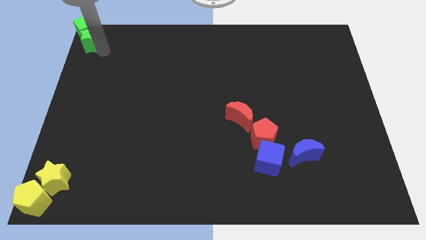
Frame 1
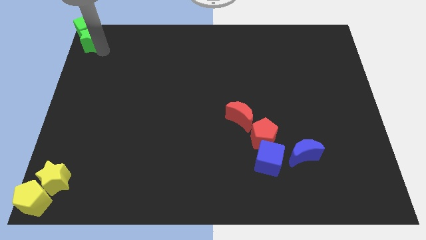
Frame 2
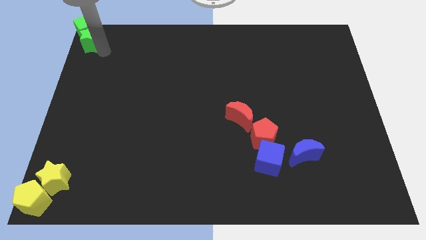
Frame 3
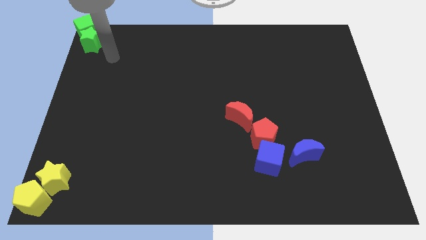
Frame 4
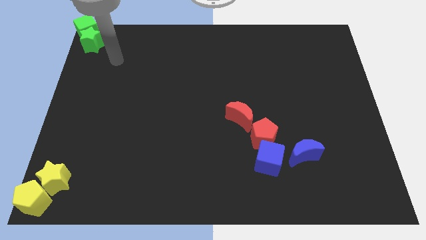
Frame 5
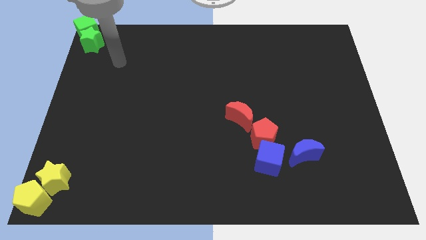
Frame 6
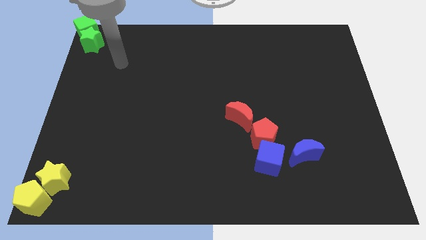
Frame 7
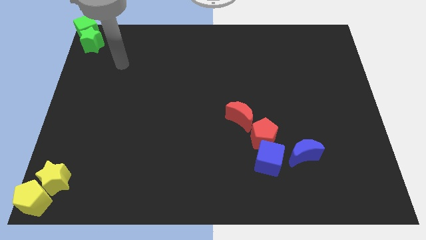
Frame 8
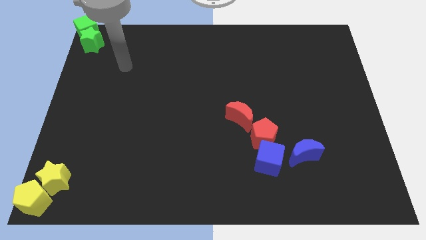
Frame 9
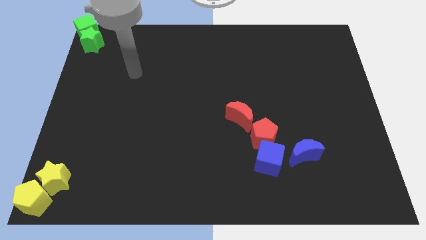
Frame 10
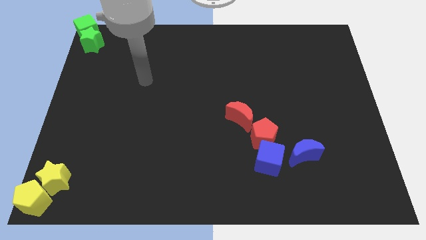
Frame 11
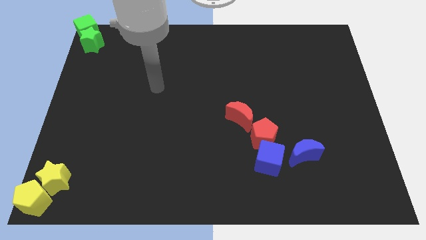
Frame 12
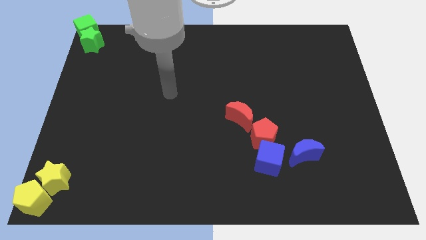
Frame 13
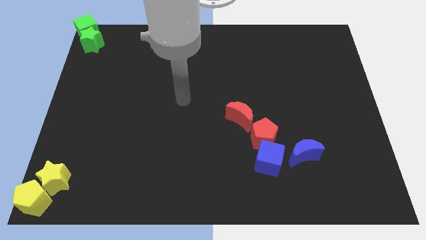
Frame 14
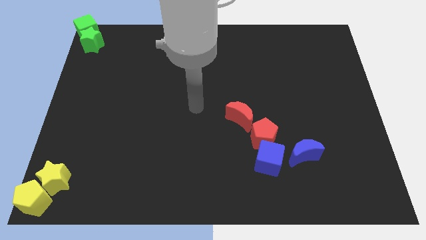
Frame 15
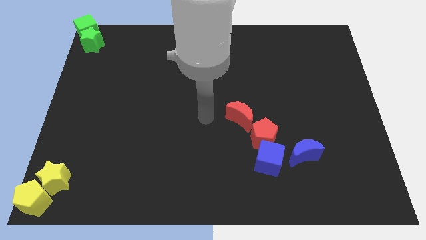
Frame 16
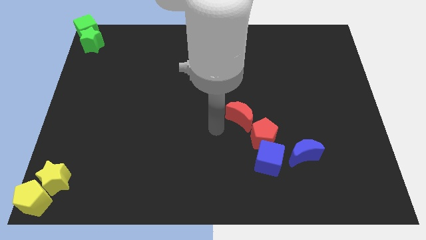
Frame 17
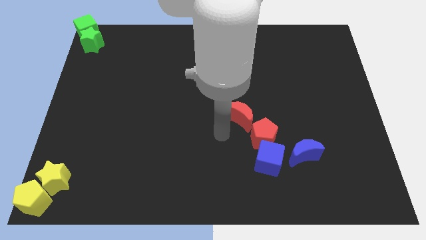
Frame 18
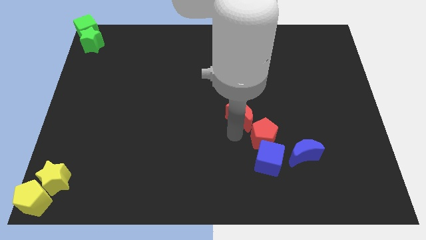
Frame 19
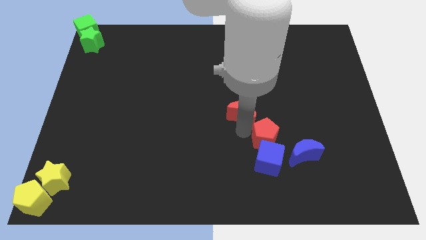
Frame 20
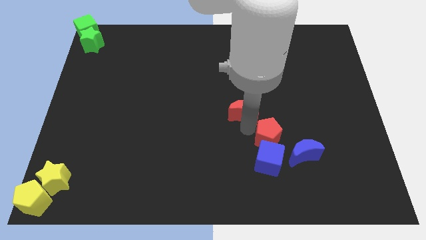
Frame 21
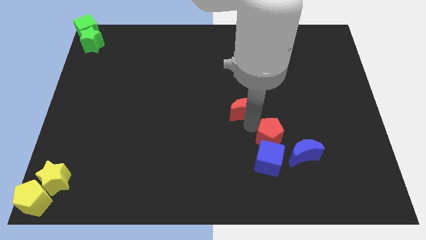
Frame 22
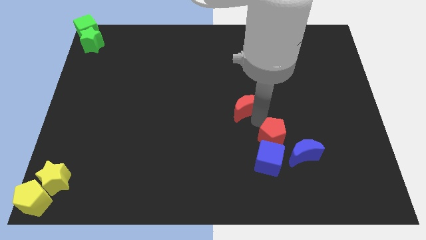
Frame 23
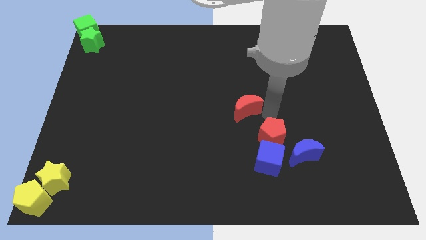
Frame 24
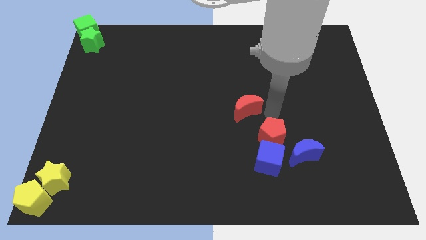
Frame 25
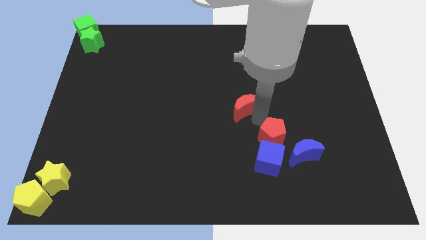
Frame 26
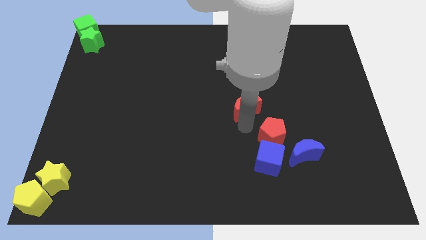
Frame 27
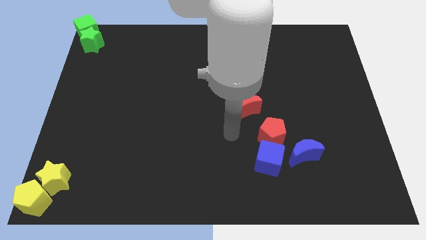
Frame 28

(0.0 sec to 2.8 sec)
separate the red moon and the red pentagon

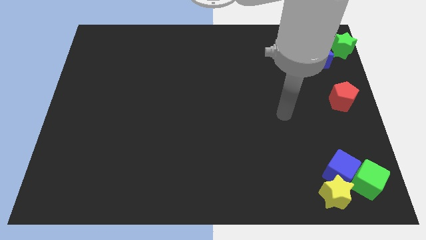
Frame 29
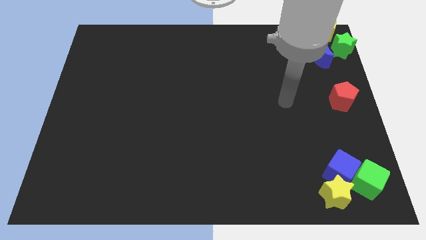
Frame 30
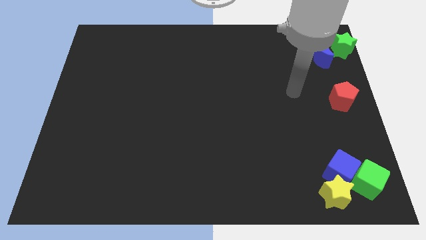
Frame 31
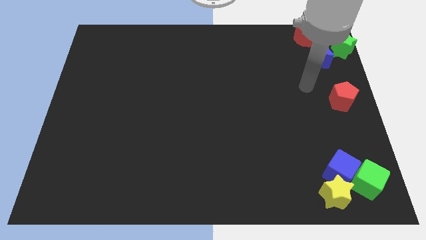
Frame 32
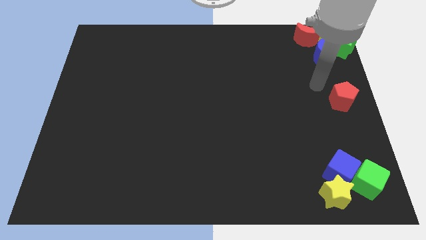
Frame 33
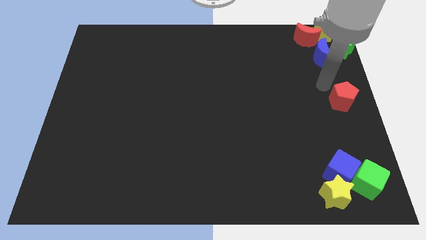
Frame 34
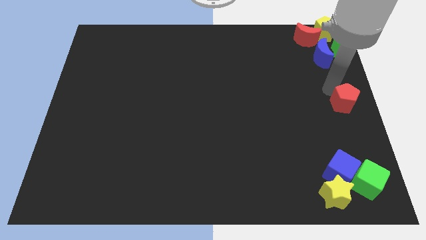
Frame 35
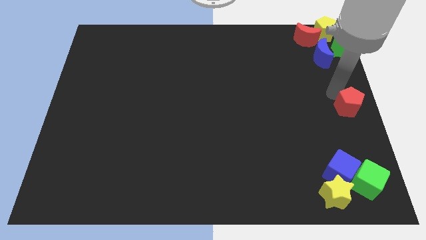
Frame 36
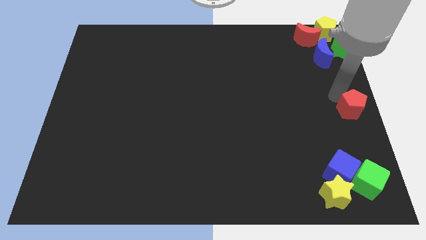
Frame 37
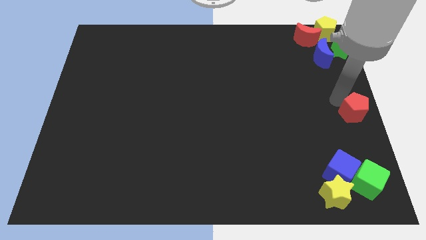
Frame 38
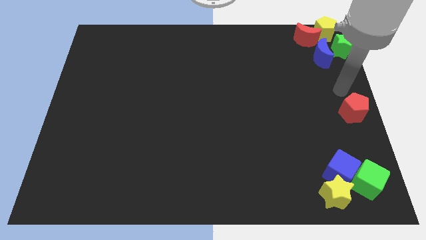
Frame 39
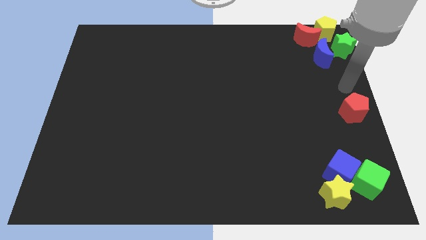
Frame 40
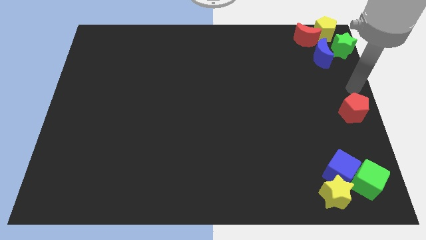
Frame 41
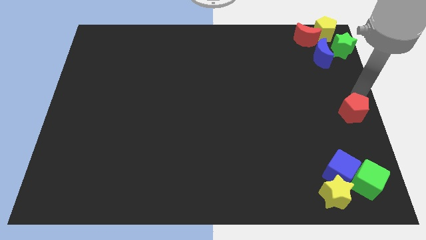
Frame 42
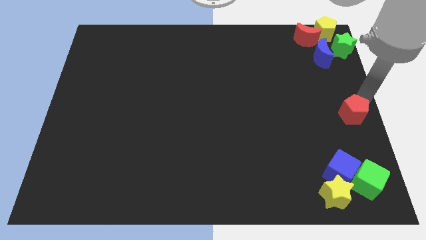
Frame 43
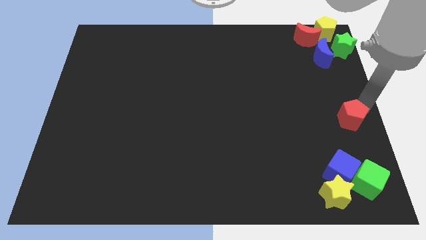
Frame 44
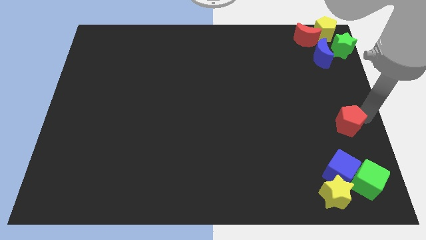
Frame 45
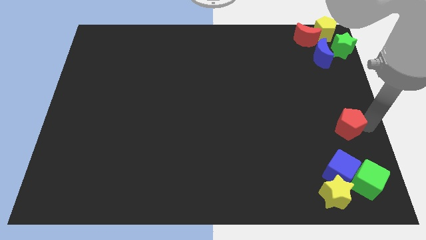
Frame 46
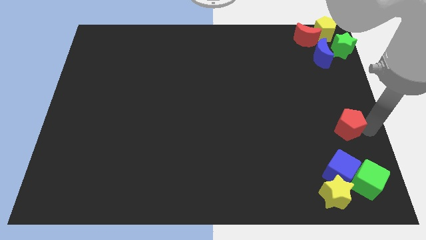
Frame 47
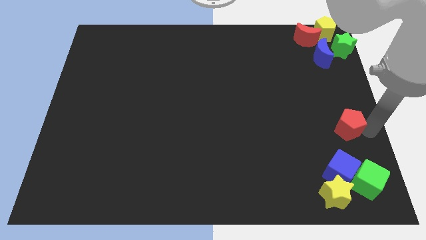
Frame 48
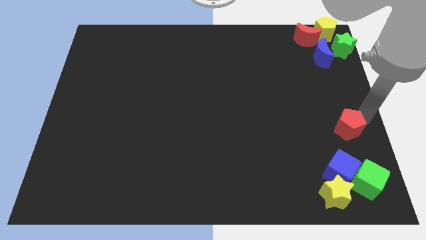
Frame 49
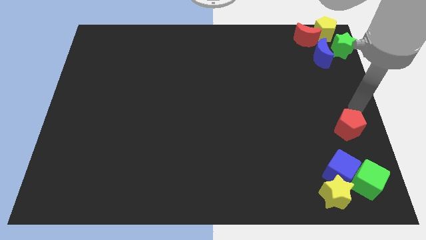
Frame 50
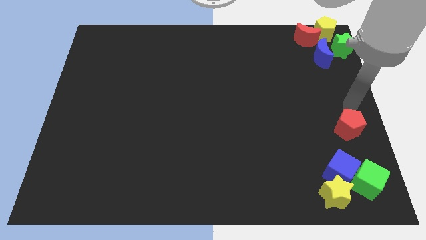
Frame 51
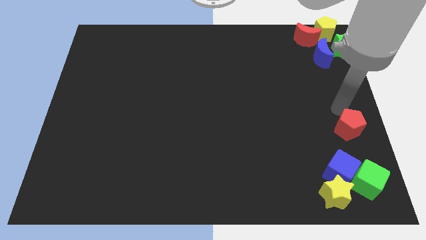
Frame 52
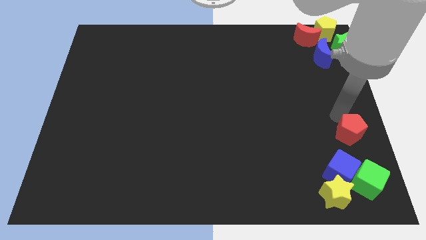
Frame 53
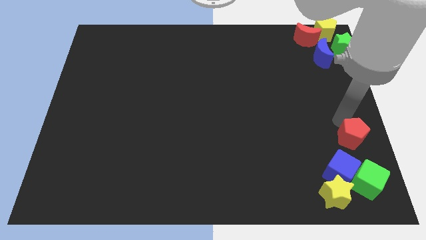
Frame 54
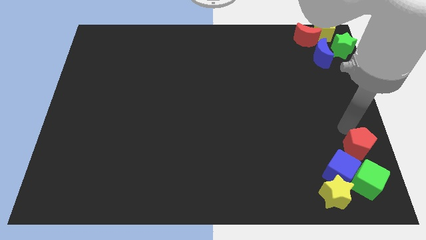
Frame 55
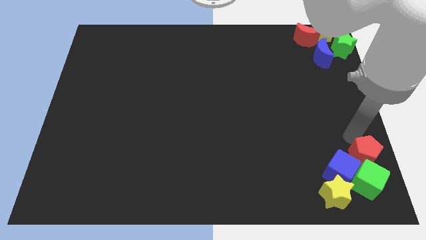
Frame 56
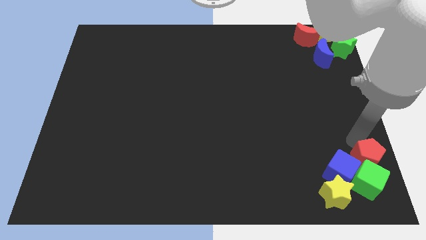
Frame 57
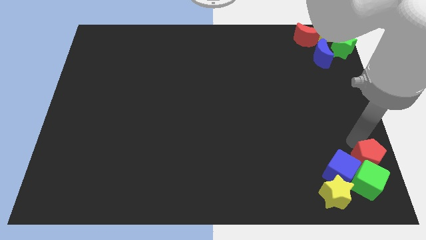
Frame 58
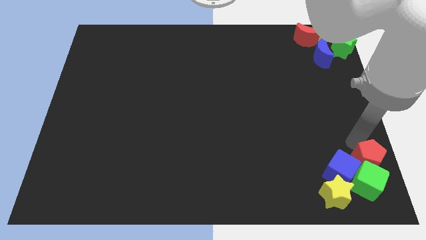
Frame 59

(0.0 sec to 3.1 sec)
move the red pentagon into the group of blocks

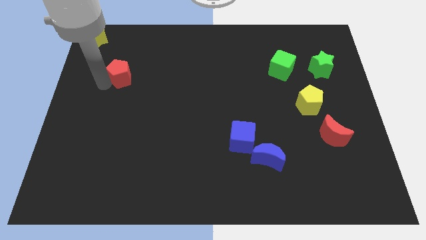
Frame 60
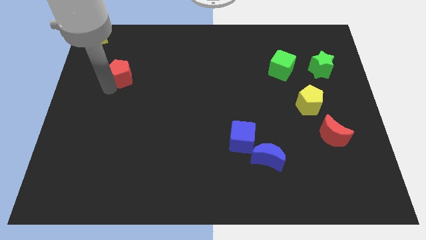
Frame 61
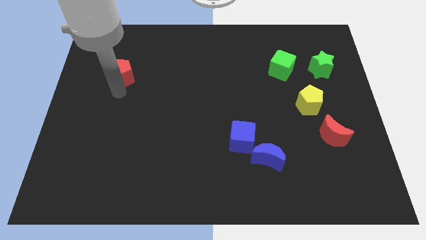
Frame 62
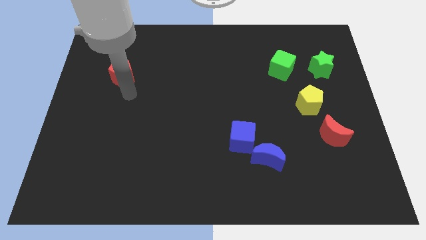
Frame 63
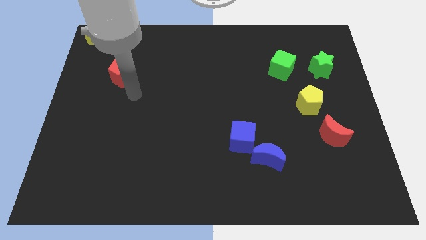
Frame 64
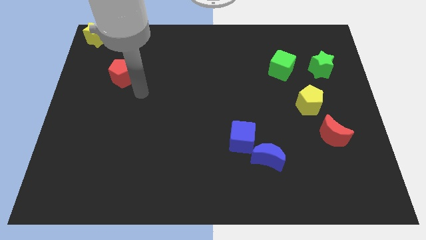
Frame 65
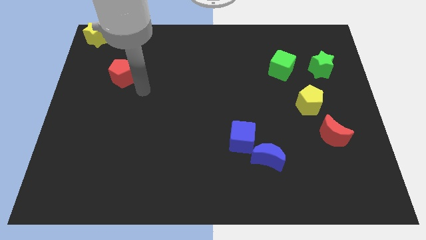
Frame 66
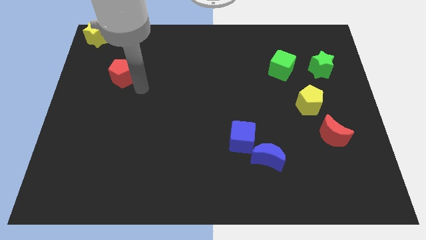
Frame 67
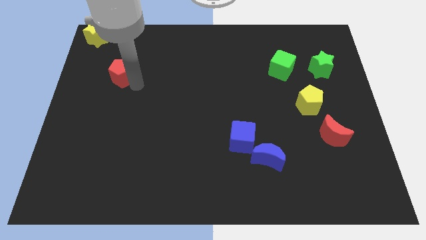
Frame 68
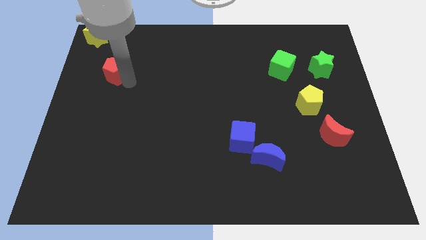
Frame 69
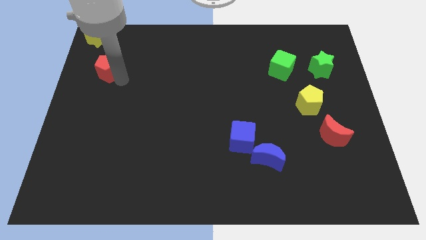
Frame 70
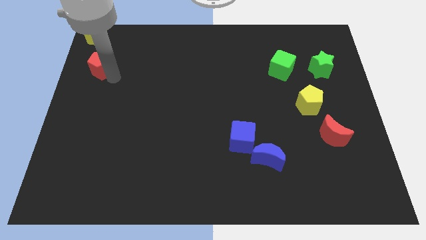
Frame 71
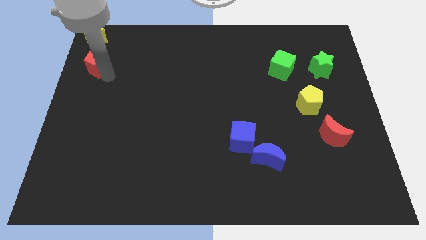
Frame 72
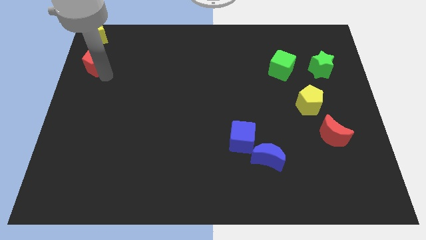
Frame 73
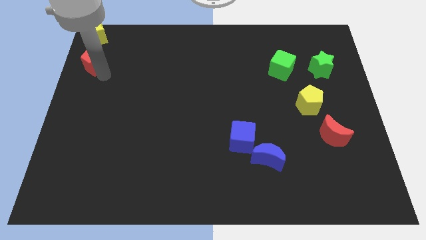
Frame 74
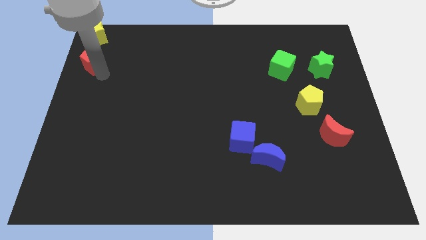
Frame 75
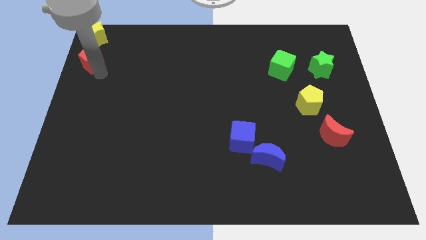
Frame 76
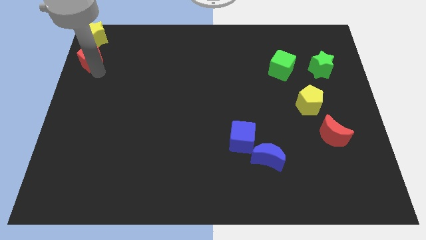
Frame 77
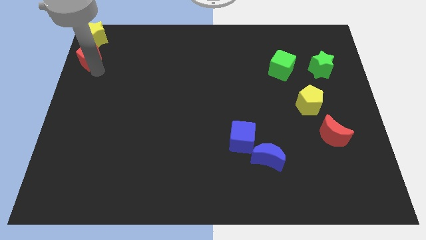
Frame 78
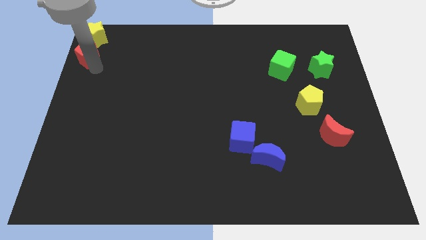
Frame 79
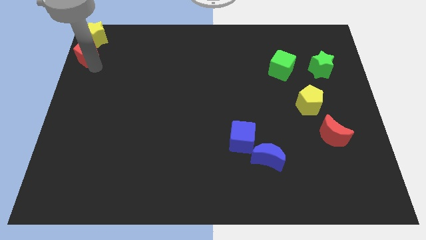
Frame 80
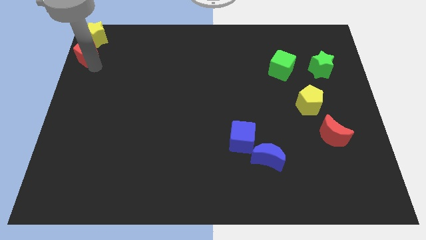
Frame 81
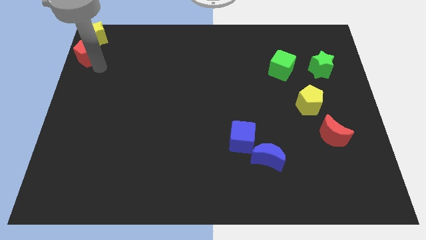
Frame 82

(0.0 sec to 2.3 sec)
move the red pentagon to the bottom of the yellow star

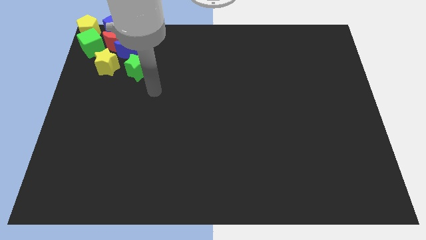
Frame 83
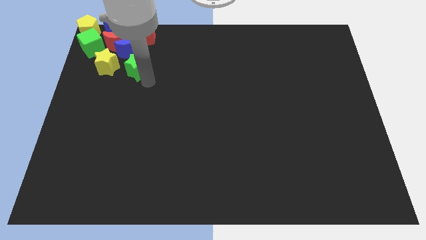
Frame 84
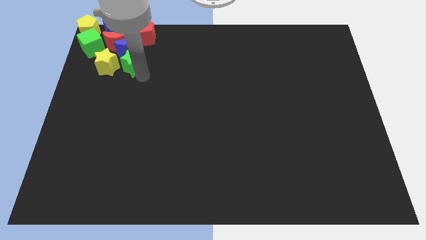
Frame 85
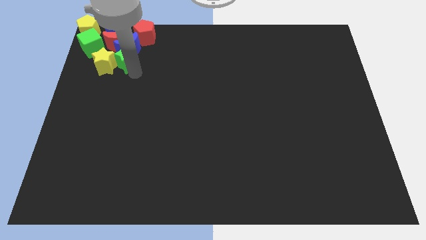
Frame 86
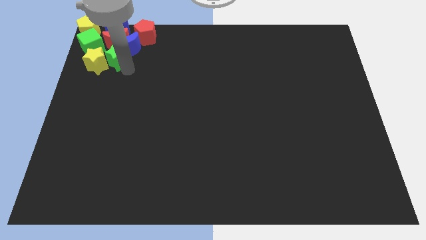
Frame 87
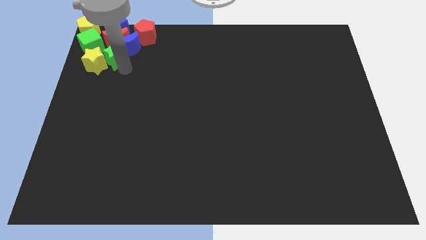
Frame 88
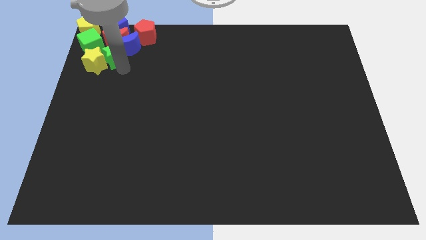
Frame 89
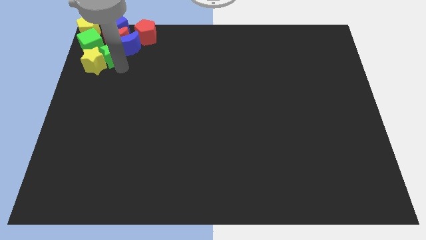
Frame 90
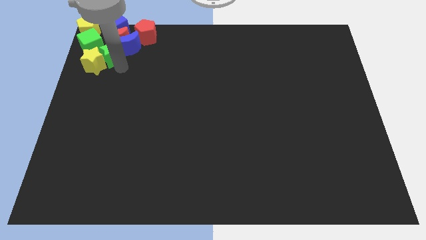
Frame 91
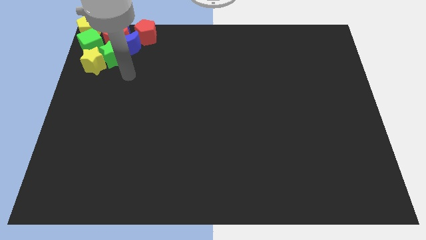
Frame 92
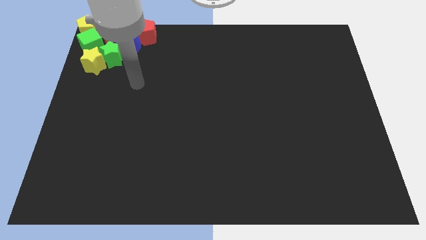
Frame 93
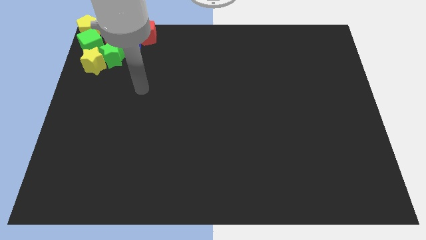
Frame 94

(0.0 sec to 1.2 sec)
push the green star into the group of blocks
